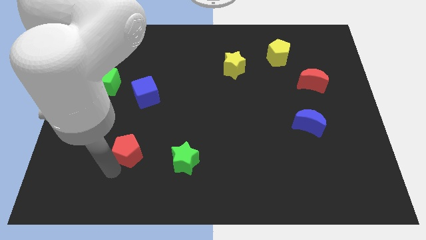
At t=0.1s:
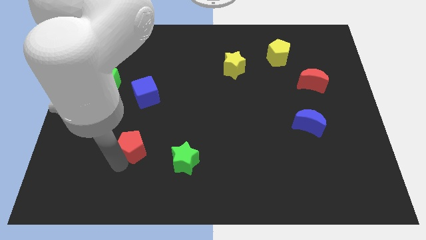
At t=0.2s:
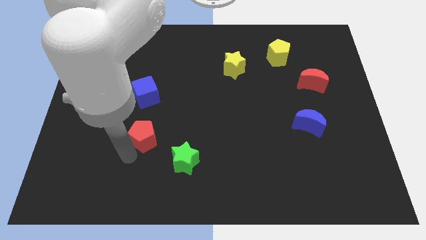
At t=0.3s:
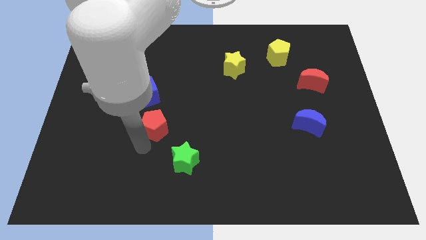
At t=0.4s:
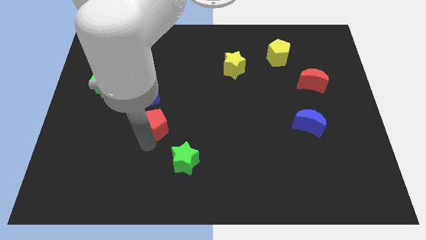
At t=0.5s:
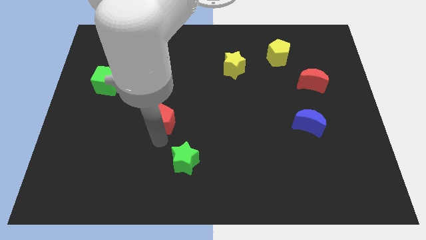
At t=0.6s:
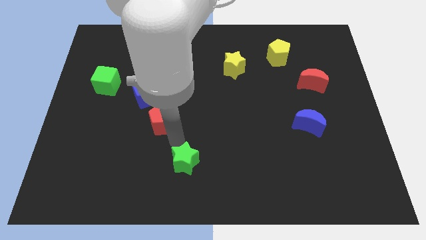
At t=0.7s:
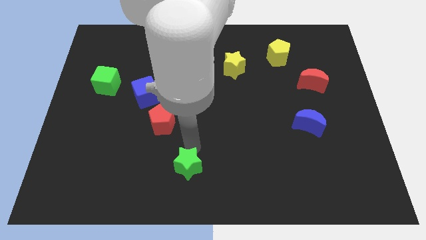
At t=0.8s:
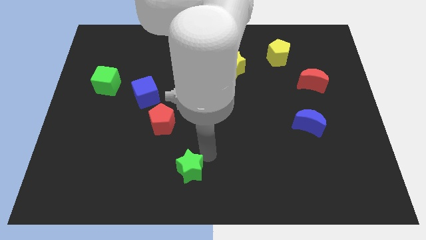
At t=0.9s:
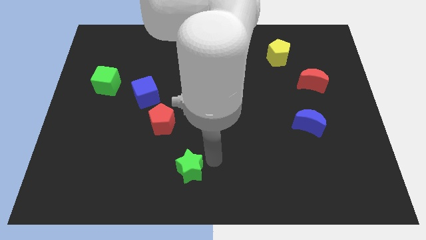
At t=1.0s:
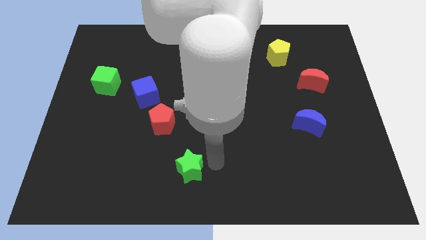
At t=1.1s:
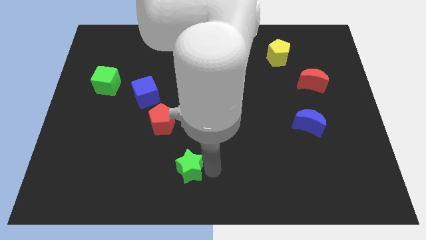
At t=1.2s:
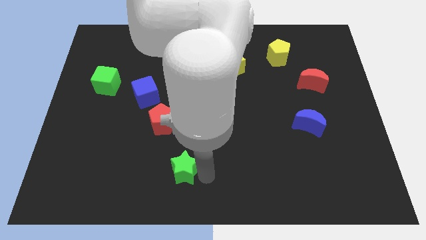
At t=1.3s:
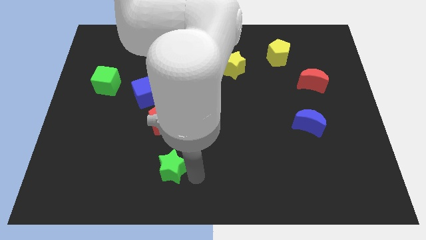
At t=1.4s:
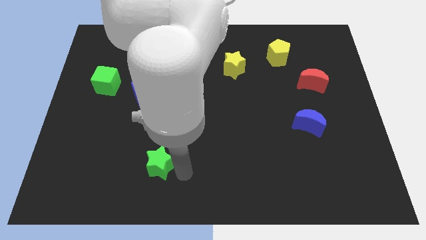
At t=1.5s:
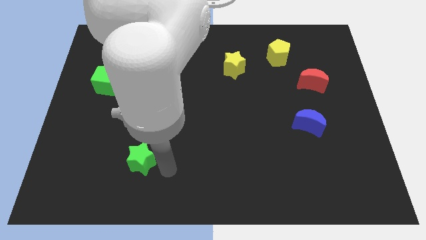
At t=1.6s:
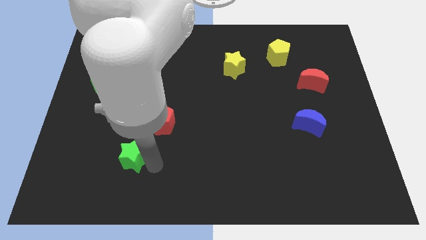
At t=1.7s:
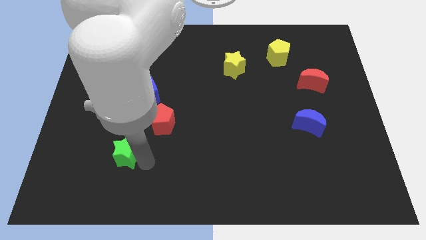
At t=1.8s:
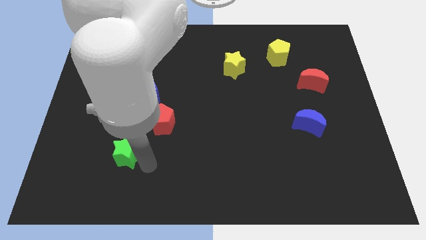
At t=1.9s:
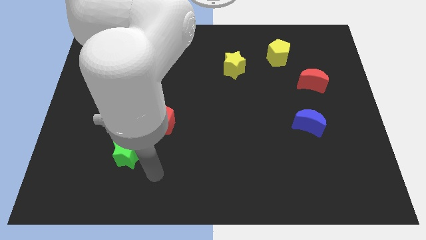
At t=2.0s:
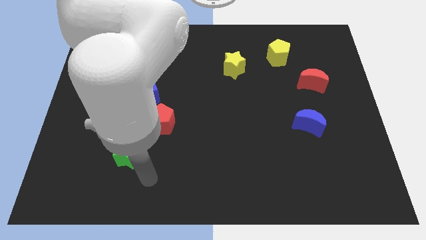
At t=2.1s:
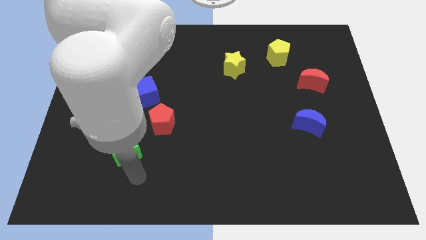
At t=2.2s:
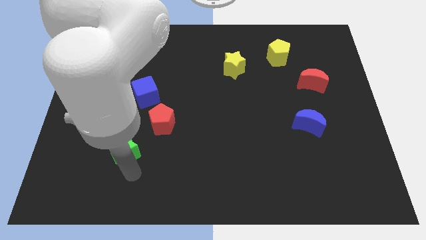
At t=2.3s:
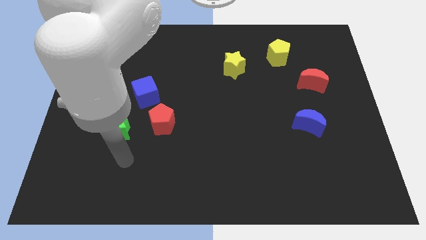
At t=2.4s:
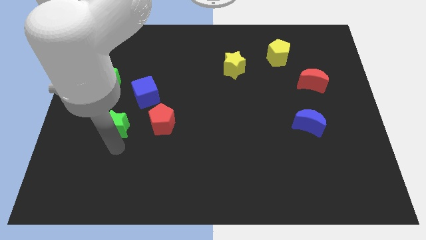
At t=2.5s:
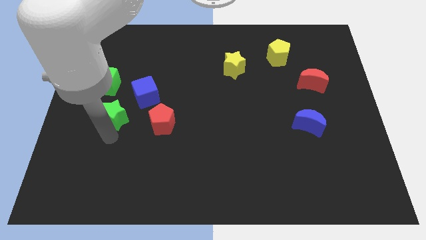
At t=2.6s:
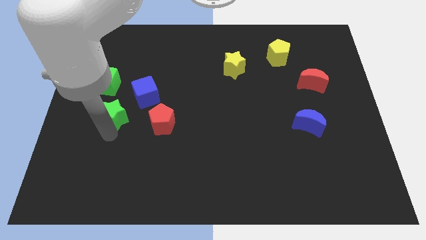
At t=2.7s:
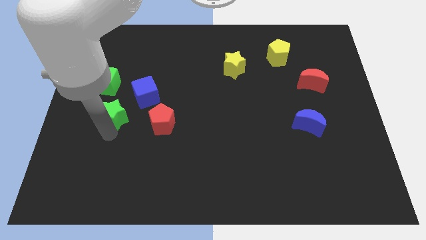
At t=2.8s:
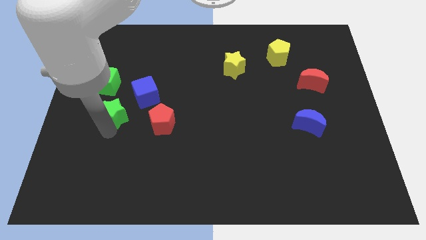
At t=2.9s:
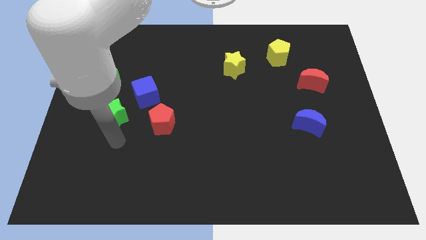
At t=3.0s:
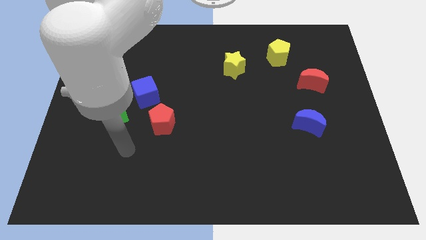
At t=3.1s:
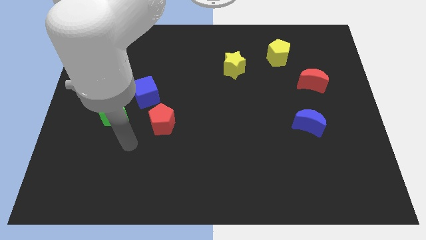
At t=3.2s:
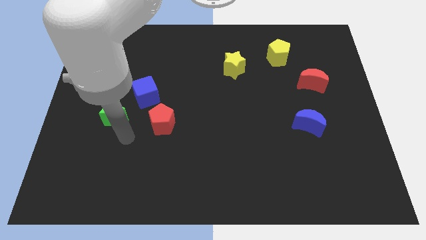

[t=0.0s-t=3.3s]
move the green star to the bottom of the green cube

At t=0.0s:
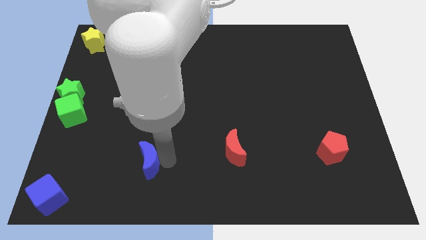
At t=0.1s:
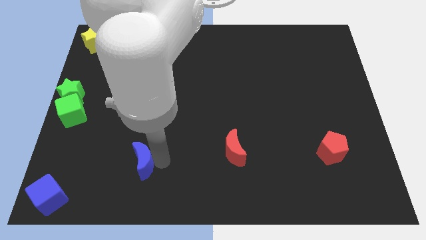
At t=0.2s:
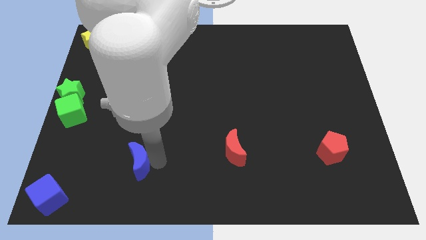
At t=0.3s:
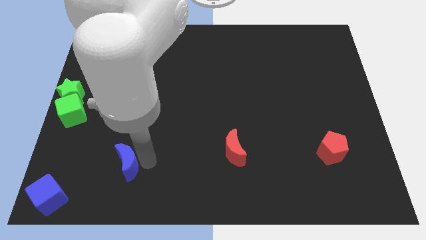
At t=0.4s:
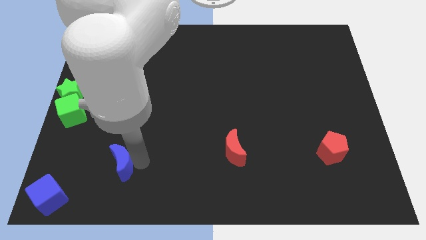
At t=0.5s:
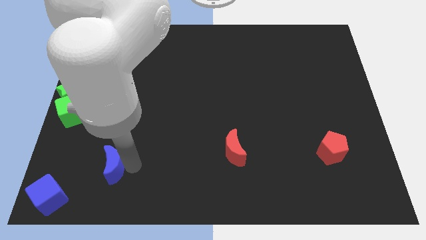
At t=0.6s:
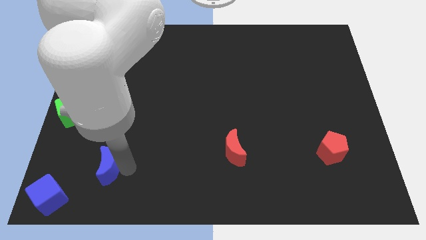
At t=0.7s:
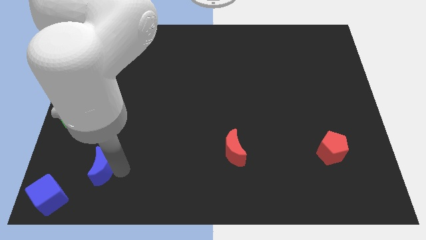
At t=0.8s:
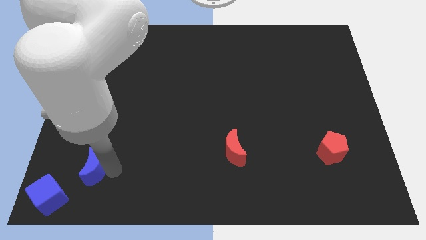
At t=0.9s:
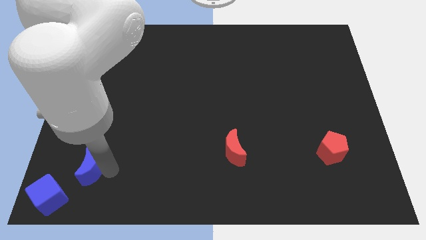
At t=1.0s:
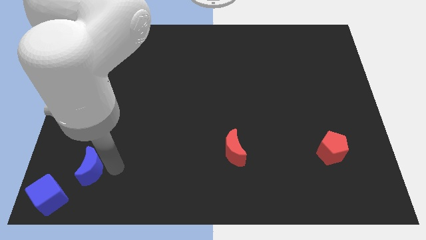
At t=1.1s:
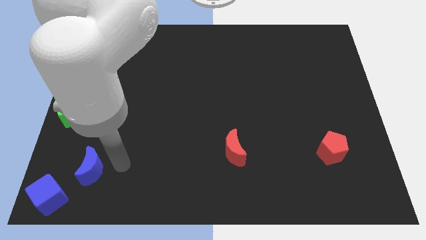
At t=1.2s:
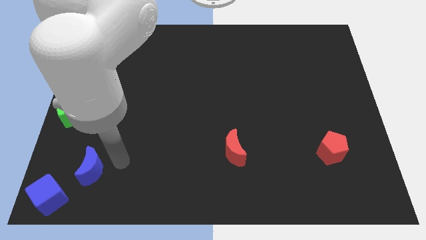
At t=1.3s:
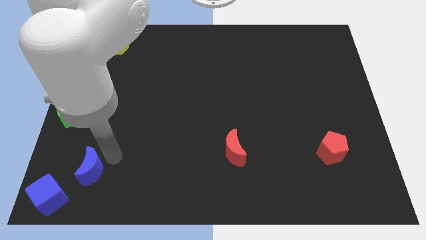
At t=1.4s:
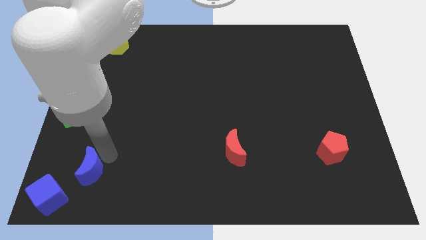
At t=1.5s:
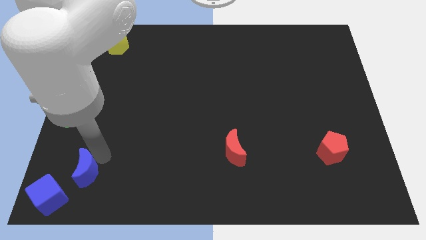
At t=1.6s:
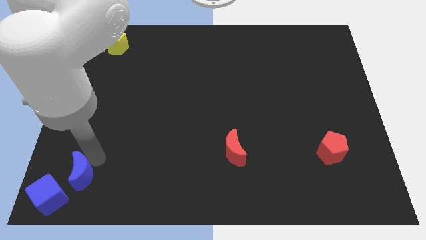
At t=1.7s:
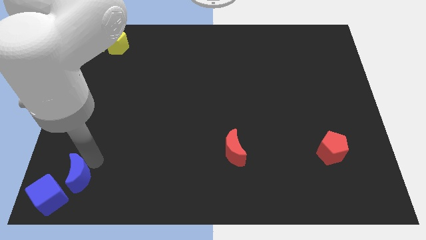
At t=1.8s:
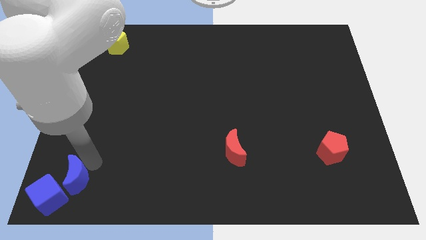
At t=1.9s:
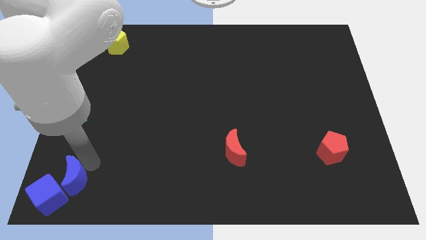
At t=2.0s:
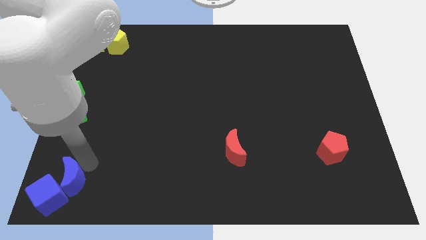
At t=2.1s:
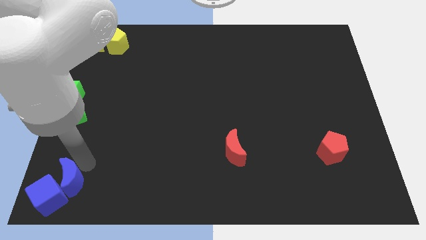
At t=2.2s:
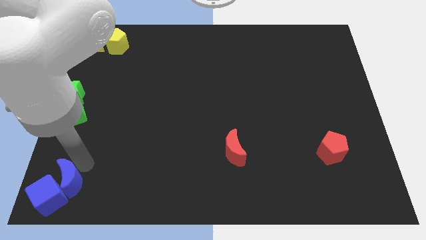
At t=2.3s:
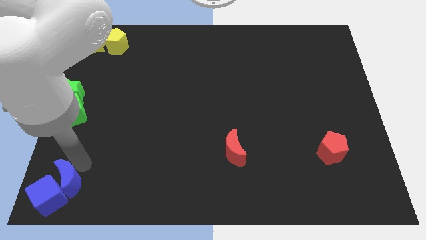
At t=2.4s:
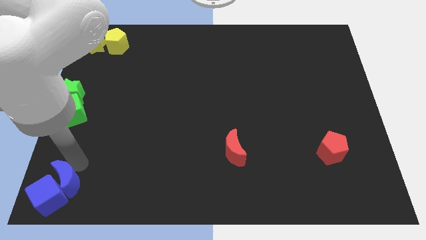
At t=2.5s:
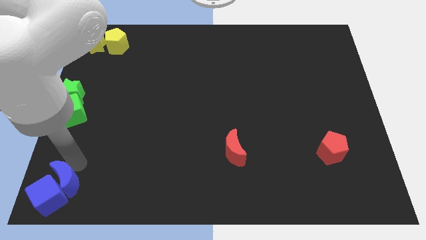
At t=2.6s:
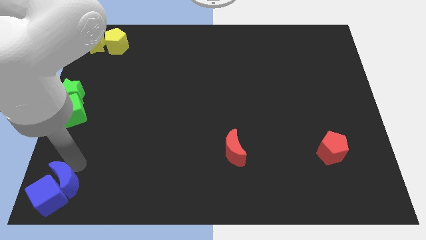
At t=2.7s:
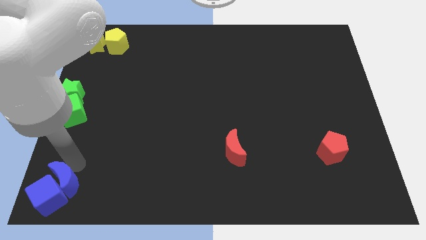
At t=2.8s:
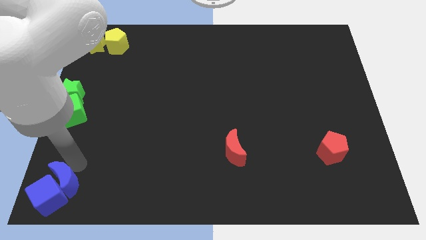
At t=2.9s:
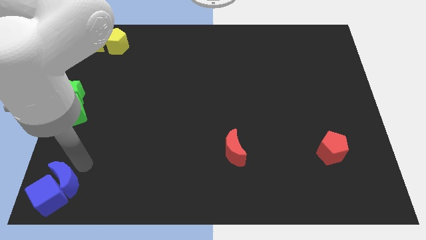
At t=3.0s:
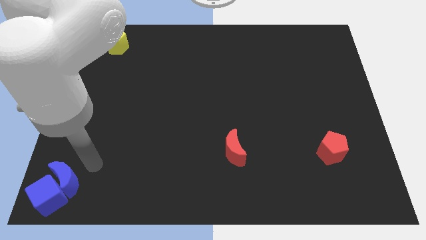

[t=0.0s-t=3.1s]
place blue crescent above to the blue cube

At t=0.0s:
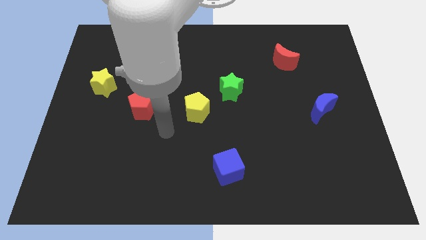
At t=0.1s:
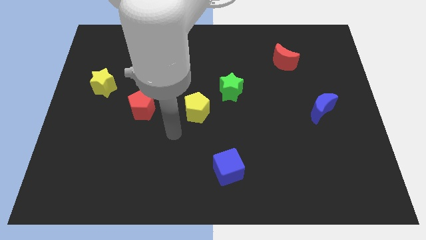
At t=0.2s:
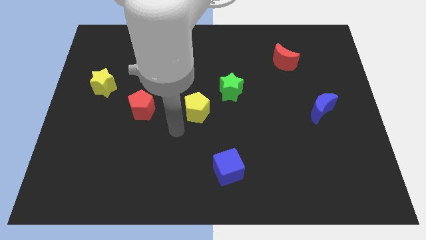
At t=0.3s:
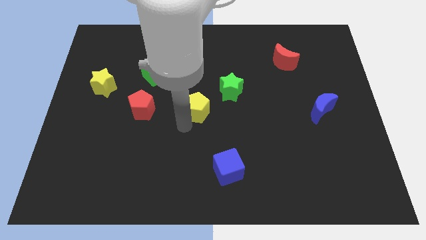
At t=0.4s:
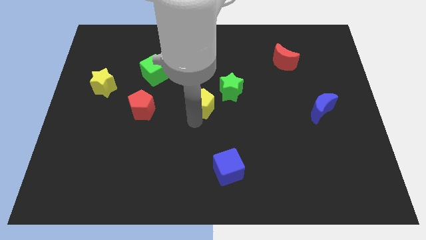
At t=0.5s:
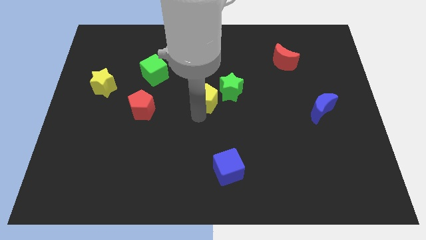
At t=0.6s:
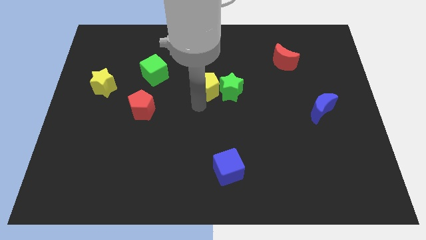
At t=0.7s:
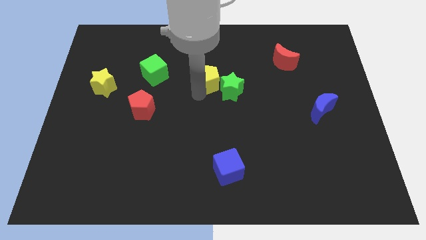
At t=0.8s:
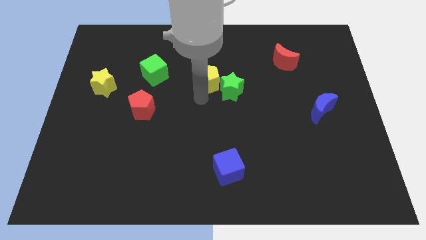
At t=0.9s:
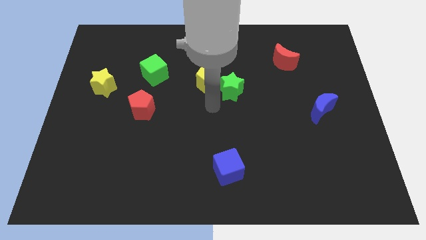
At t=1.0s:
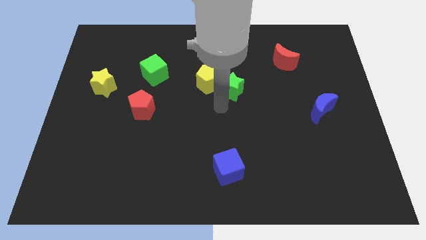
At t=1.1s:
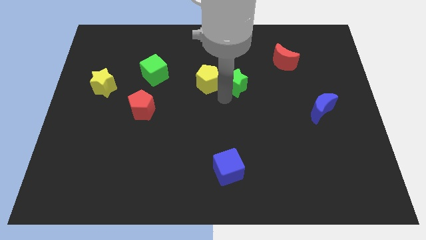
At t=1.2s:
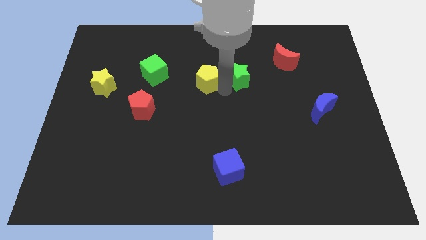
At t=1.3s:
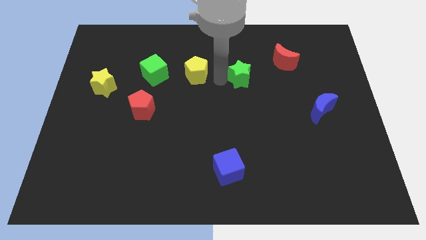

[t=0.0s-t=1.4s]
move the yellow pentagon towards top

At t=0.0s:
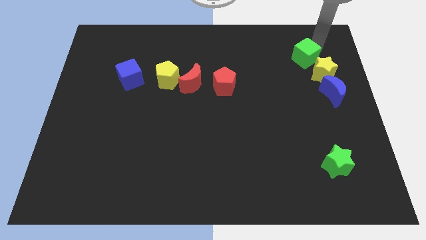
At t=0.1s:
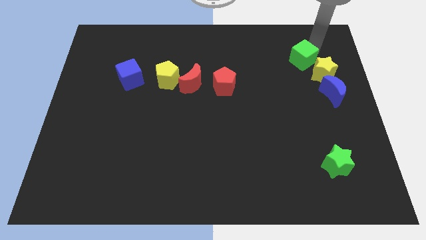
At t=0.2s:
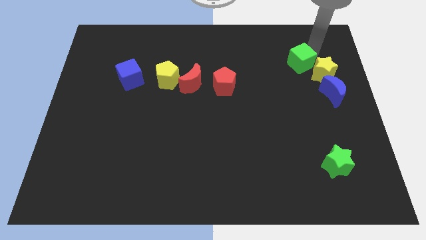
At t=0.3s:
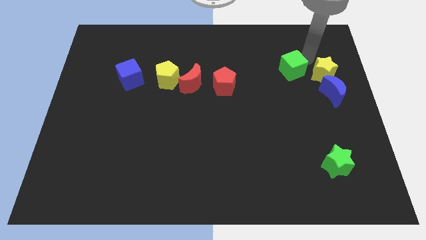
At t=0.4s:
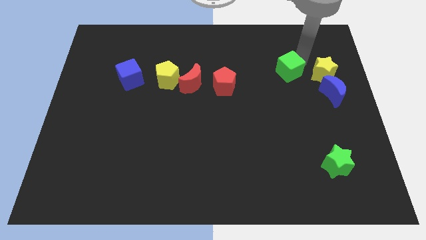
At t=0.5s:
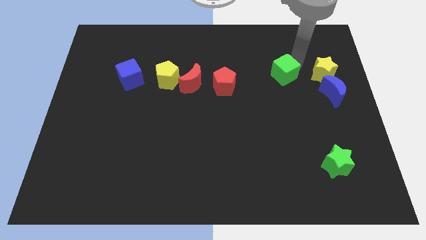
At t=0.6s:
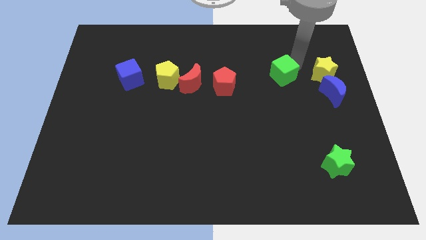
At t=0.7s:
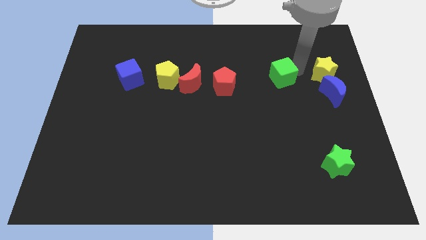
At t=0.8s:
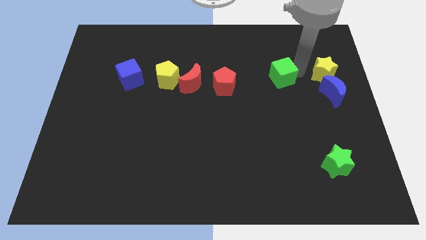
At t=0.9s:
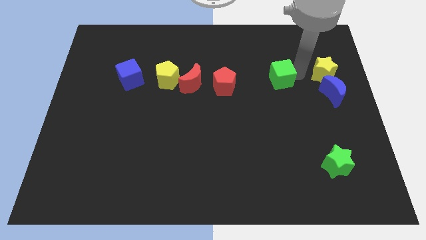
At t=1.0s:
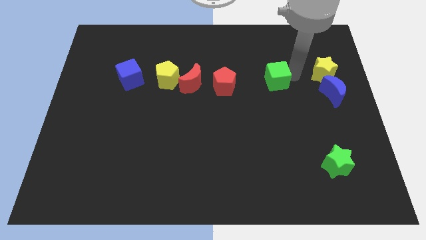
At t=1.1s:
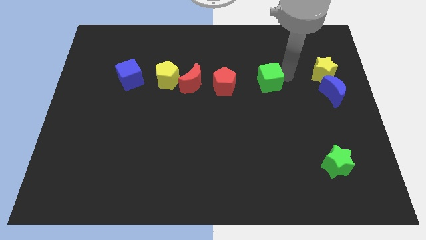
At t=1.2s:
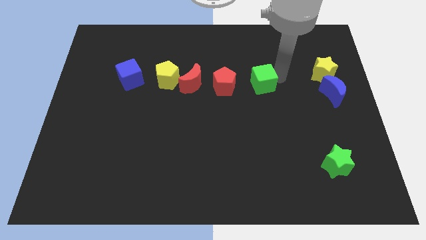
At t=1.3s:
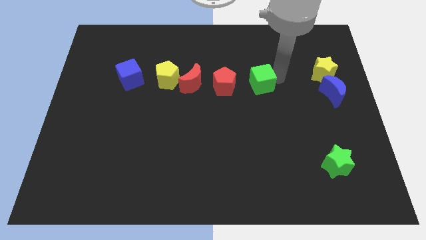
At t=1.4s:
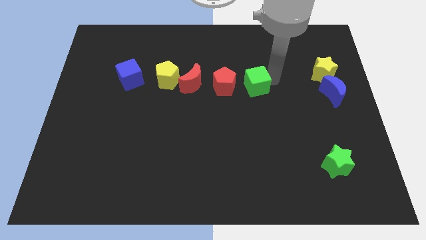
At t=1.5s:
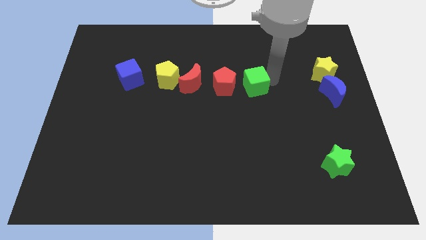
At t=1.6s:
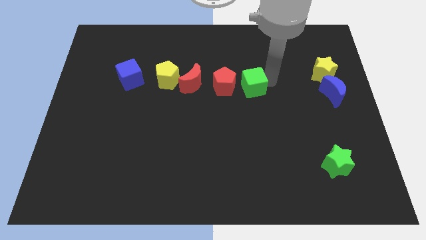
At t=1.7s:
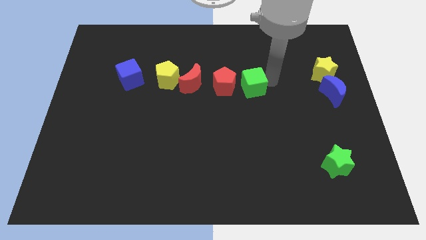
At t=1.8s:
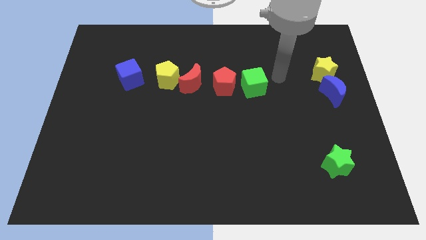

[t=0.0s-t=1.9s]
place the green cube beside the red pentagon
